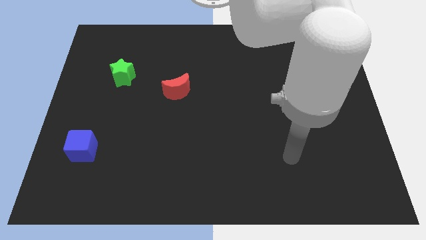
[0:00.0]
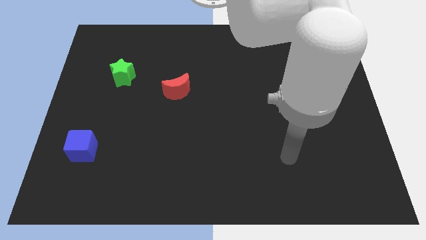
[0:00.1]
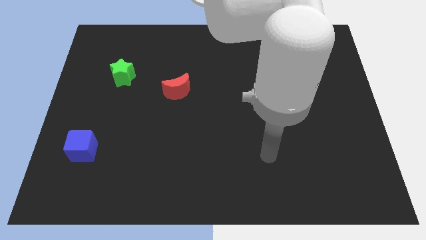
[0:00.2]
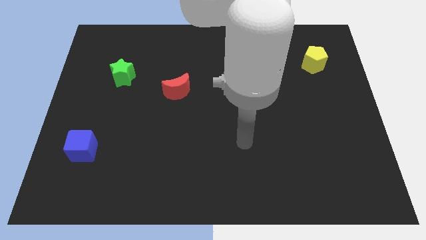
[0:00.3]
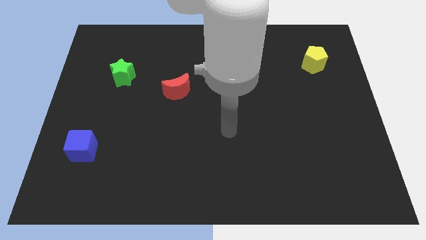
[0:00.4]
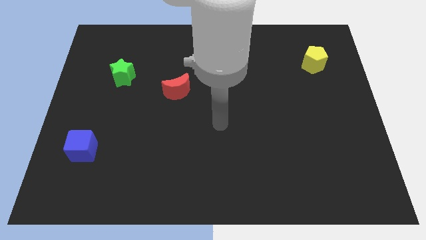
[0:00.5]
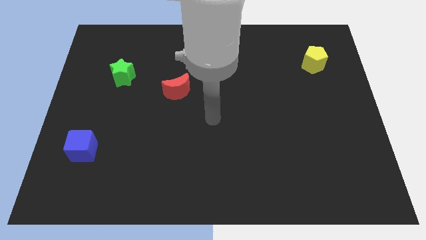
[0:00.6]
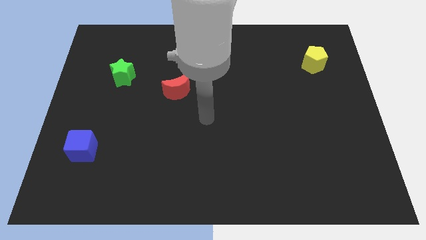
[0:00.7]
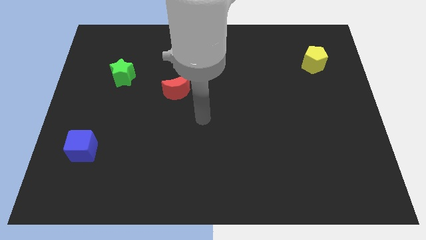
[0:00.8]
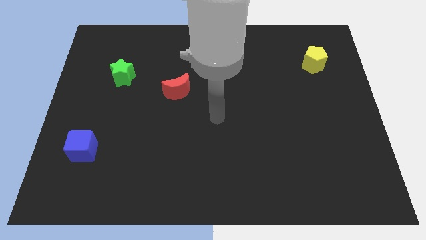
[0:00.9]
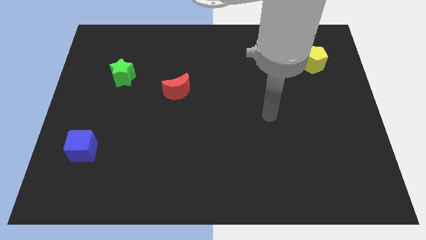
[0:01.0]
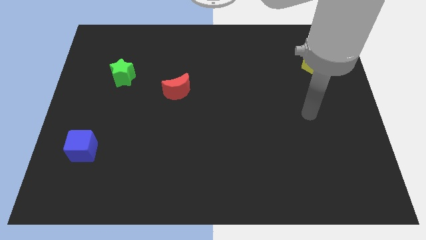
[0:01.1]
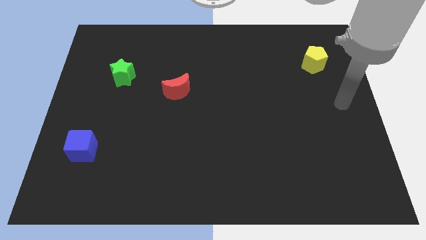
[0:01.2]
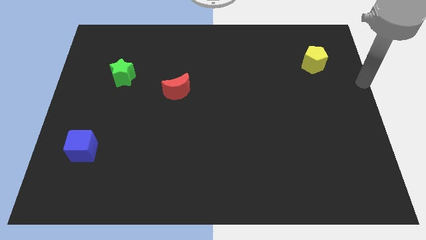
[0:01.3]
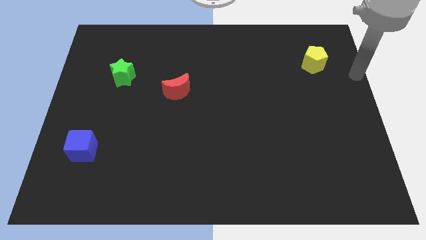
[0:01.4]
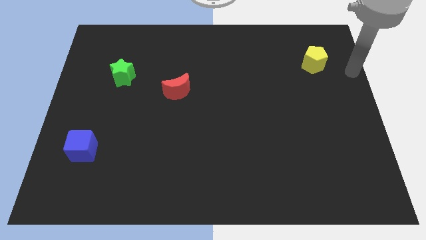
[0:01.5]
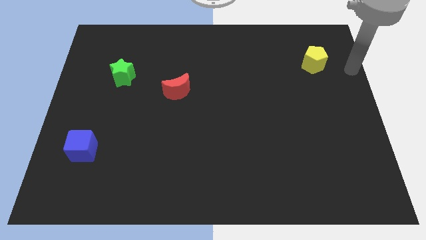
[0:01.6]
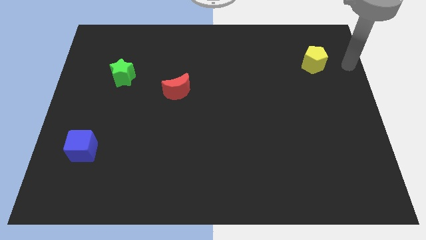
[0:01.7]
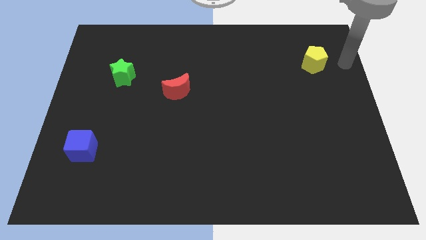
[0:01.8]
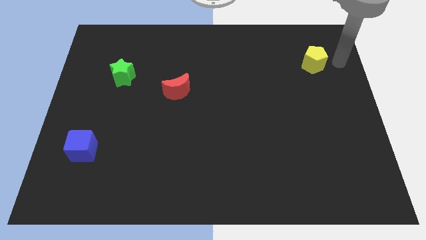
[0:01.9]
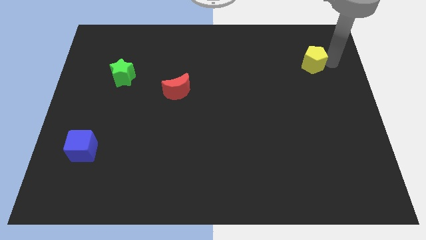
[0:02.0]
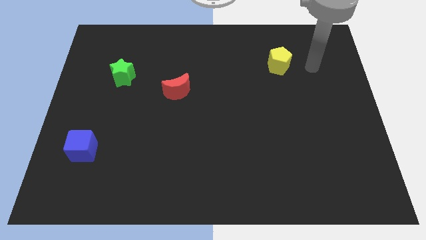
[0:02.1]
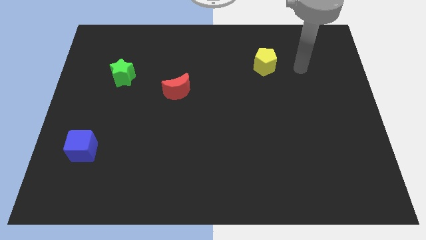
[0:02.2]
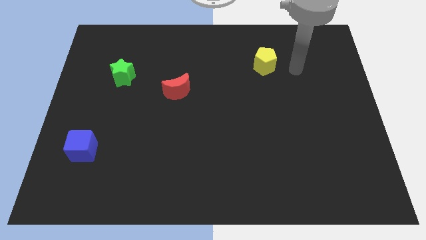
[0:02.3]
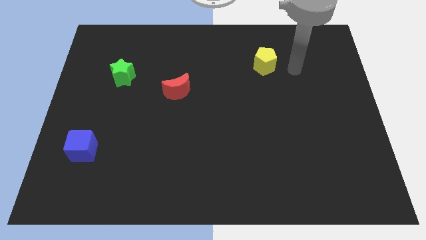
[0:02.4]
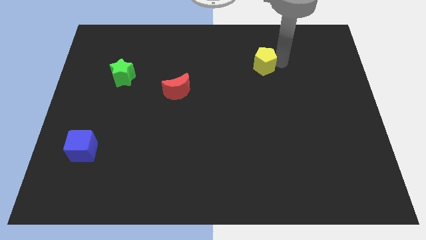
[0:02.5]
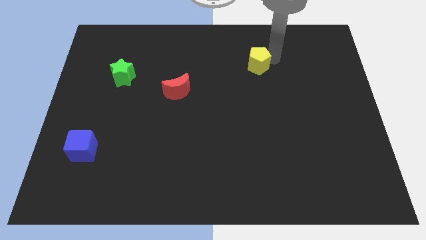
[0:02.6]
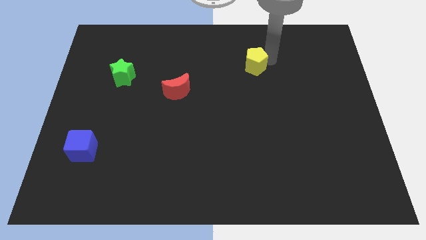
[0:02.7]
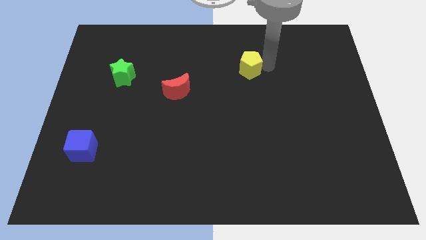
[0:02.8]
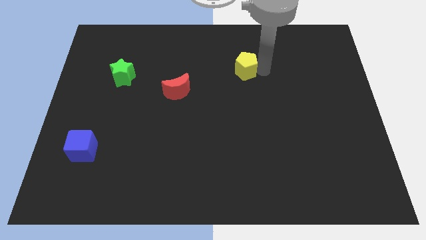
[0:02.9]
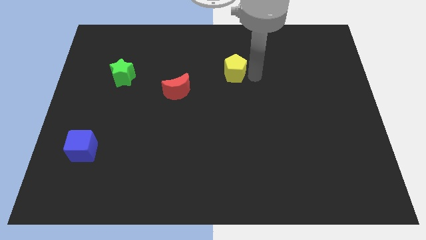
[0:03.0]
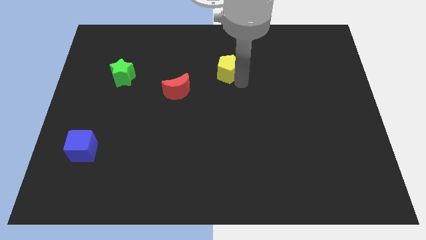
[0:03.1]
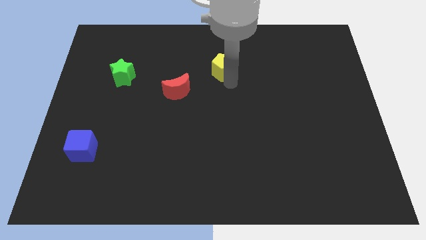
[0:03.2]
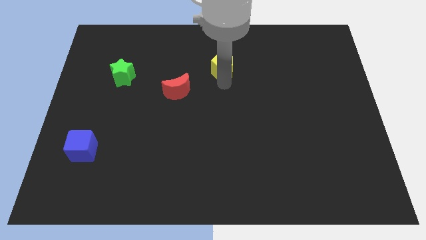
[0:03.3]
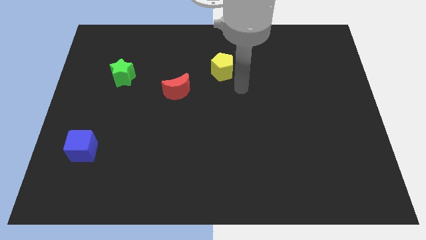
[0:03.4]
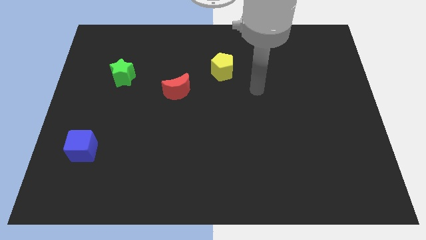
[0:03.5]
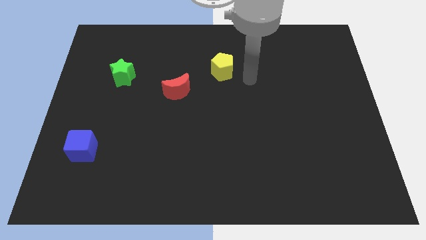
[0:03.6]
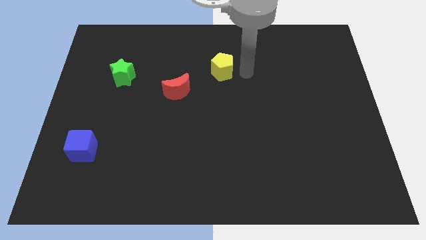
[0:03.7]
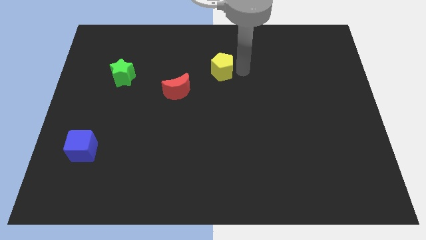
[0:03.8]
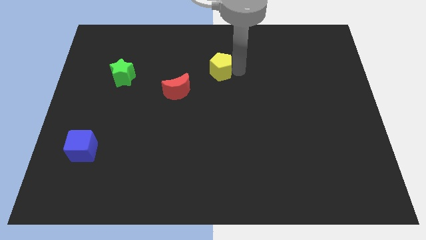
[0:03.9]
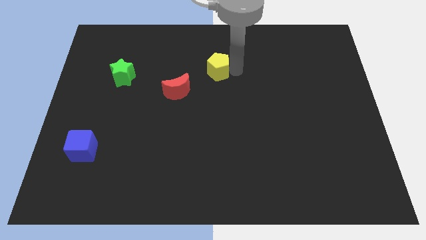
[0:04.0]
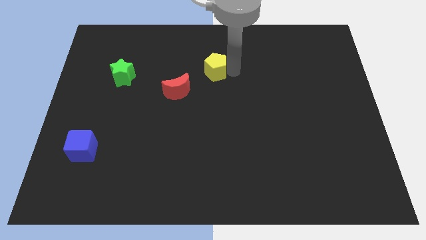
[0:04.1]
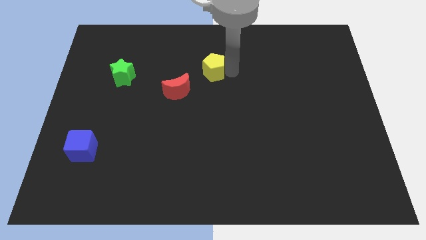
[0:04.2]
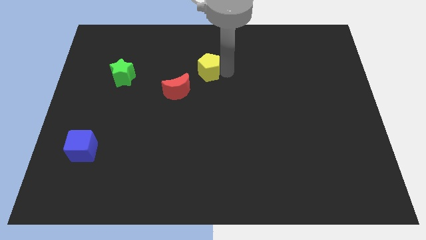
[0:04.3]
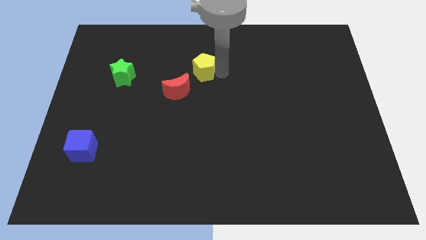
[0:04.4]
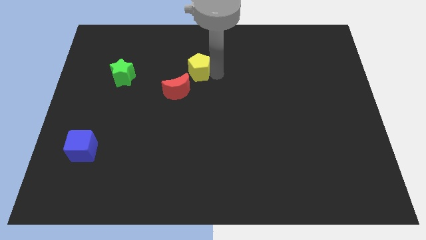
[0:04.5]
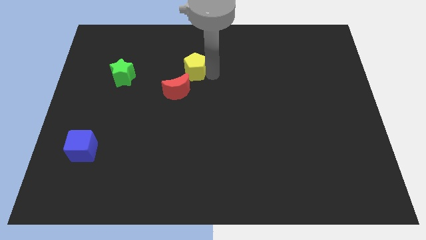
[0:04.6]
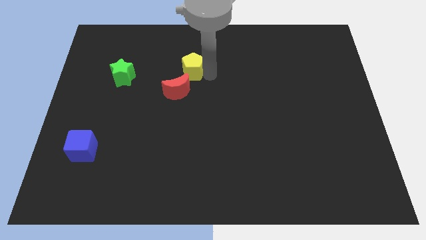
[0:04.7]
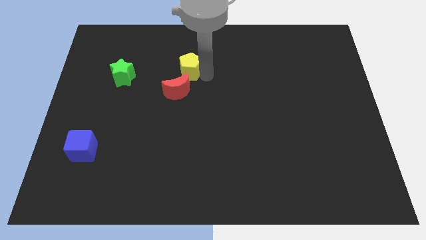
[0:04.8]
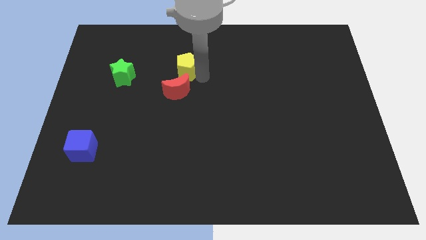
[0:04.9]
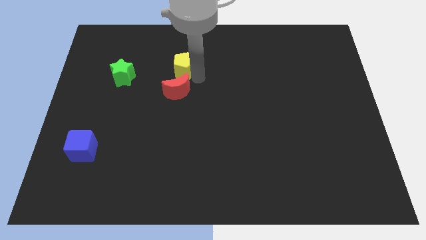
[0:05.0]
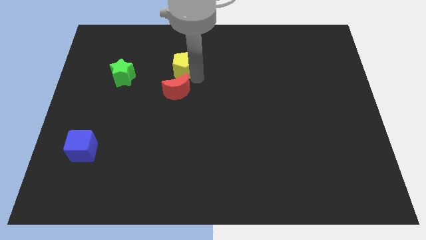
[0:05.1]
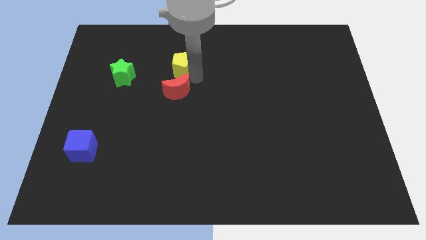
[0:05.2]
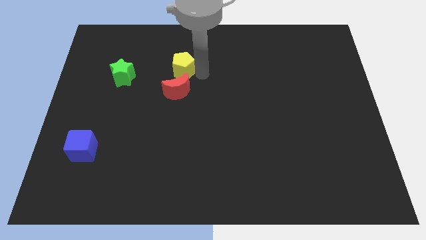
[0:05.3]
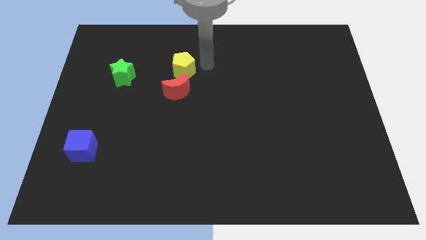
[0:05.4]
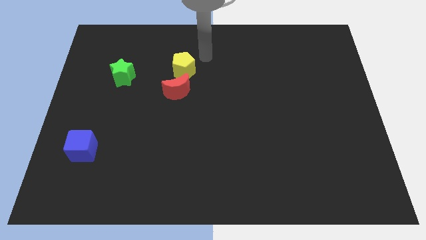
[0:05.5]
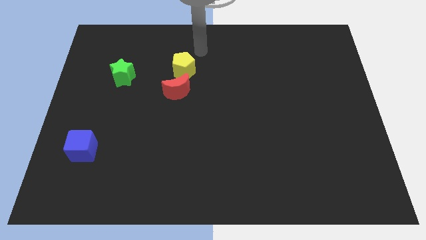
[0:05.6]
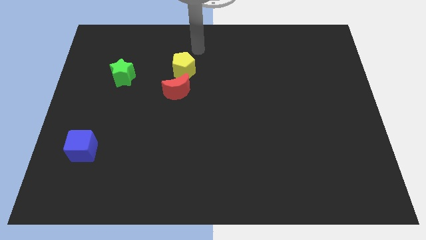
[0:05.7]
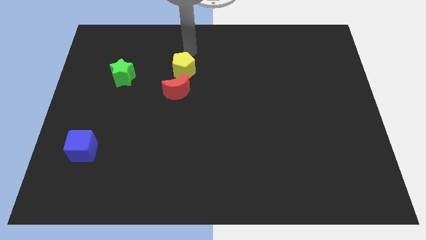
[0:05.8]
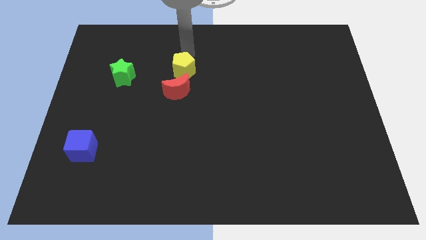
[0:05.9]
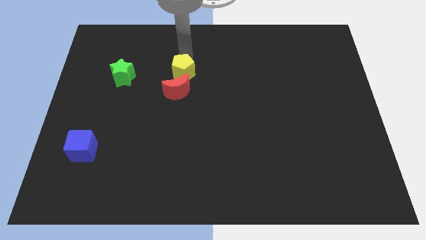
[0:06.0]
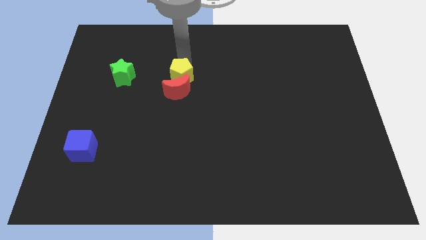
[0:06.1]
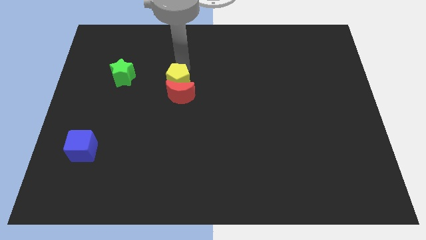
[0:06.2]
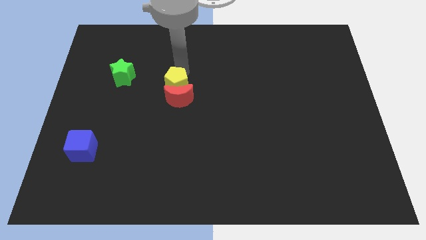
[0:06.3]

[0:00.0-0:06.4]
put the yellow pentagon to the red moon

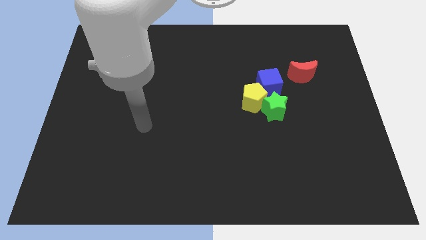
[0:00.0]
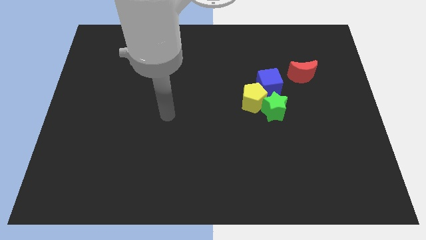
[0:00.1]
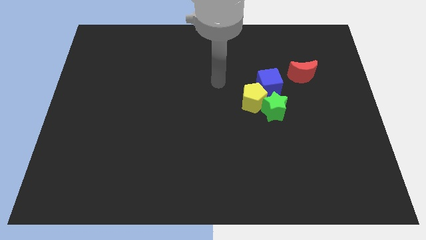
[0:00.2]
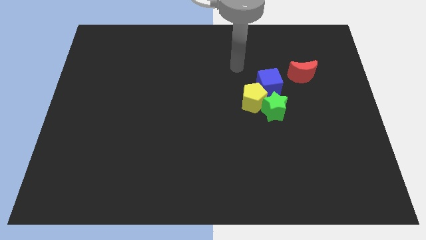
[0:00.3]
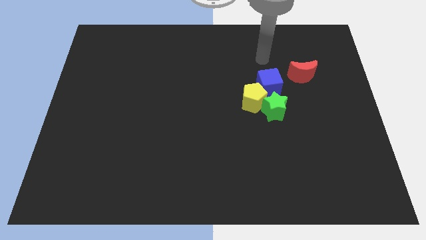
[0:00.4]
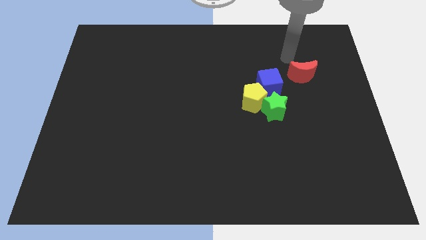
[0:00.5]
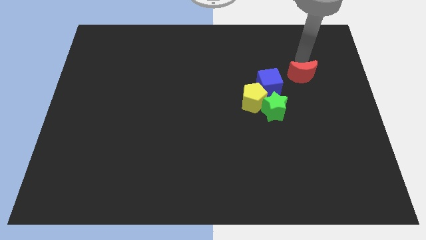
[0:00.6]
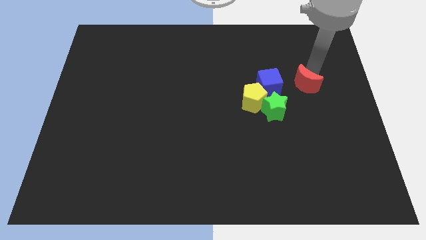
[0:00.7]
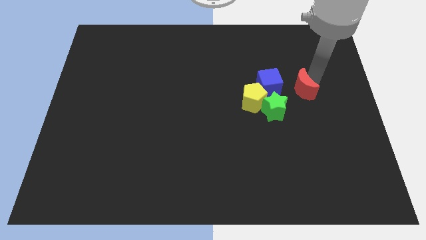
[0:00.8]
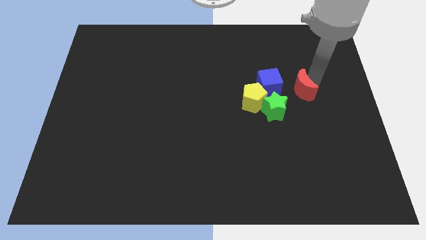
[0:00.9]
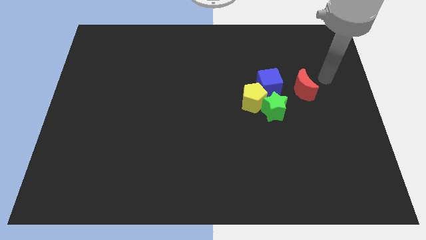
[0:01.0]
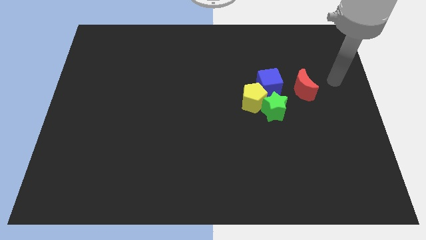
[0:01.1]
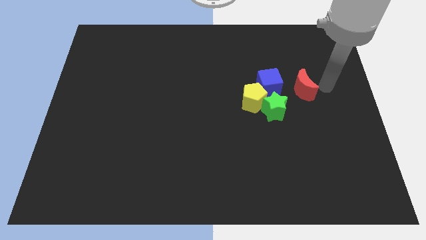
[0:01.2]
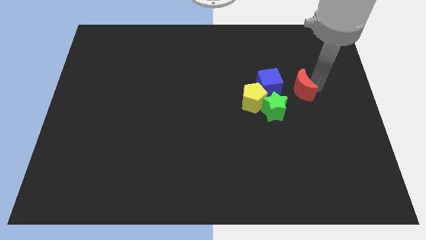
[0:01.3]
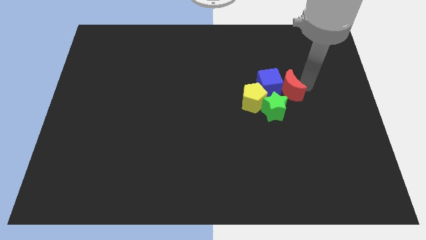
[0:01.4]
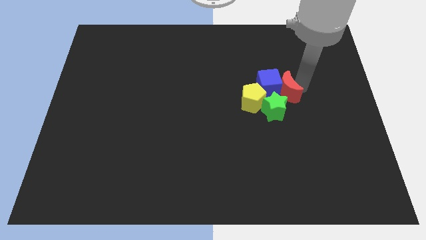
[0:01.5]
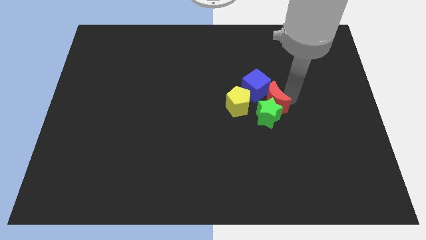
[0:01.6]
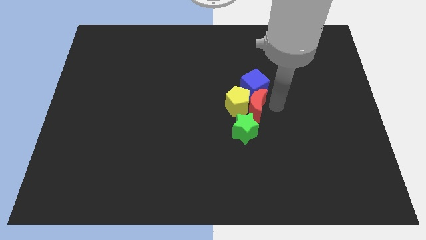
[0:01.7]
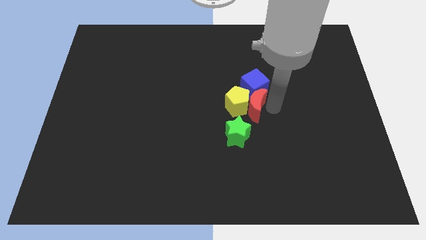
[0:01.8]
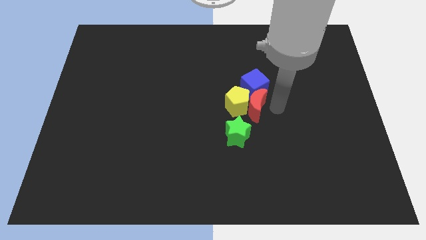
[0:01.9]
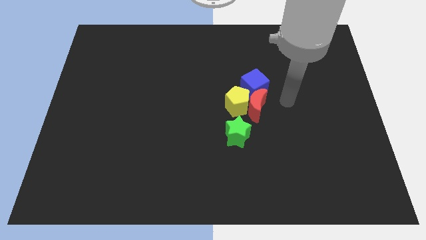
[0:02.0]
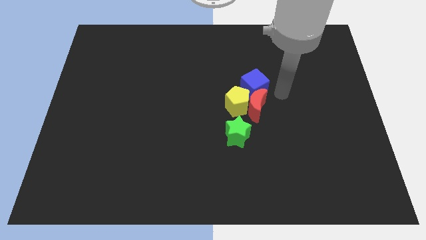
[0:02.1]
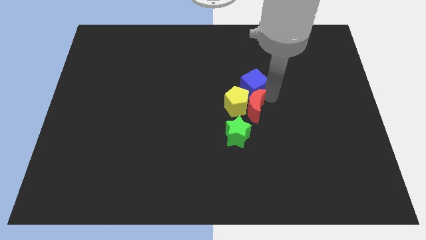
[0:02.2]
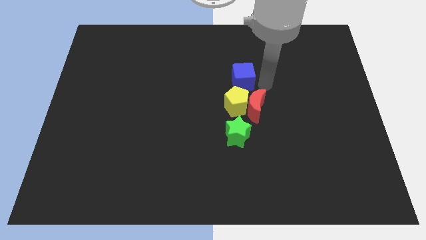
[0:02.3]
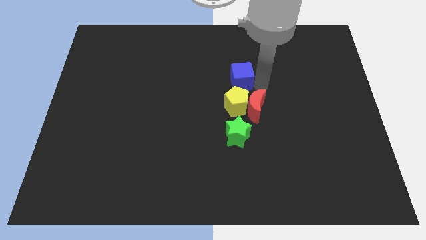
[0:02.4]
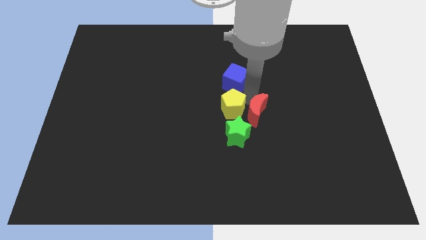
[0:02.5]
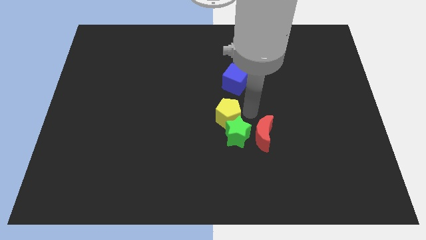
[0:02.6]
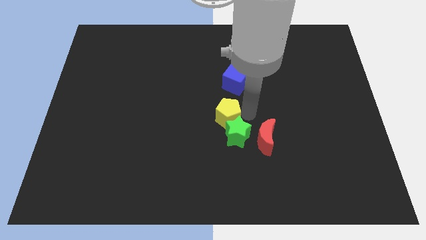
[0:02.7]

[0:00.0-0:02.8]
put the red moon towards the green block
